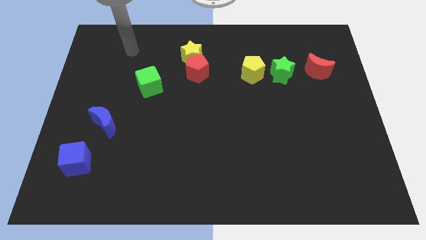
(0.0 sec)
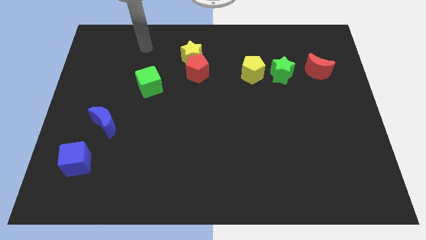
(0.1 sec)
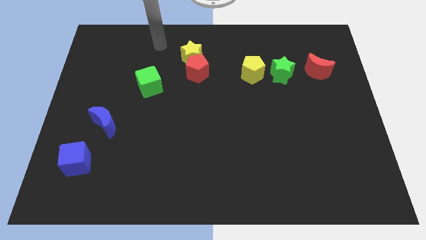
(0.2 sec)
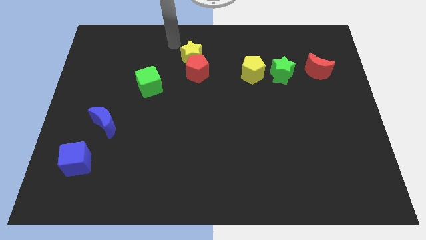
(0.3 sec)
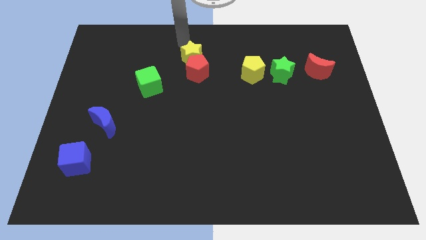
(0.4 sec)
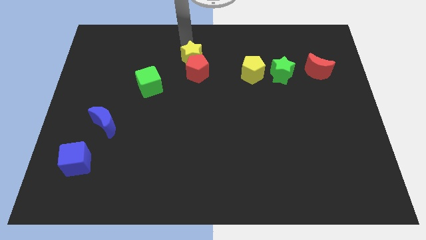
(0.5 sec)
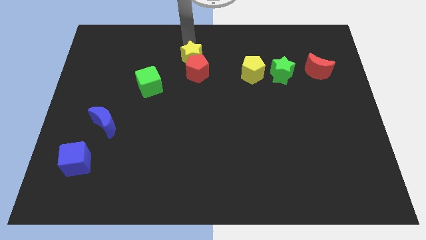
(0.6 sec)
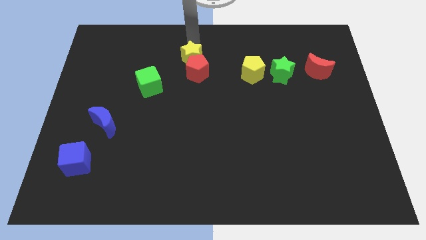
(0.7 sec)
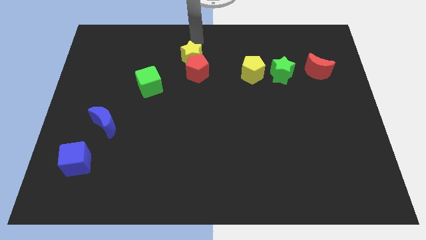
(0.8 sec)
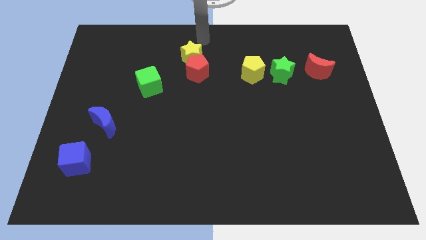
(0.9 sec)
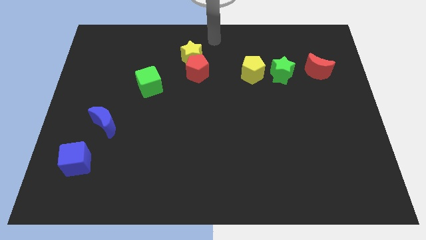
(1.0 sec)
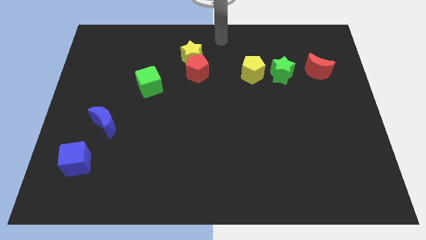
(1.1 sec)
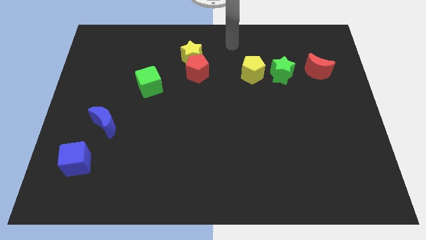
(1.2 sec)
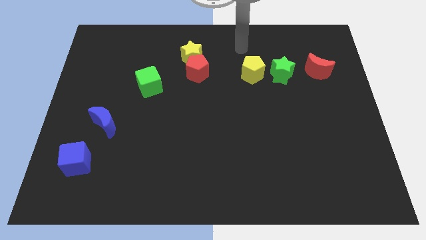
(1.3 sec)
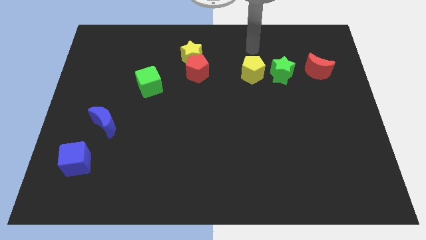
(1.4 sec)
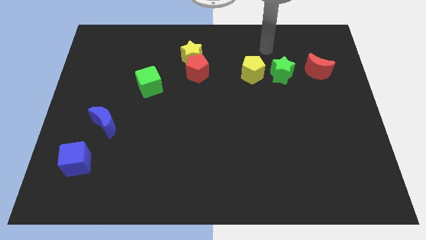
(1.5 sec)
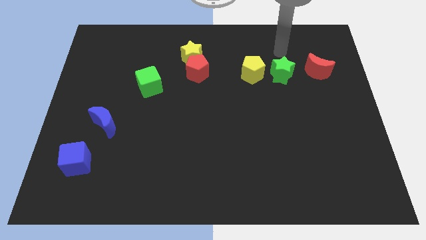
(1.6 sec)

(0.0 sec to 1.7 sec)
move the arm towards the green star

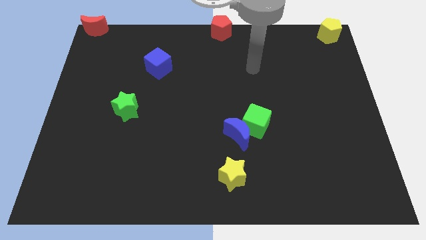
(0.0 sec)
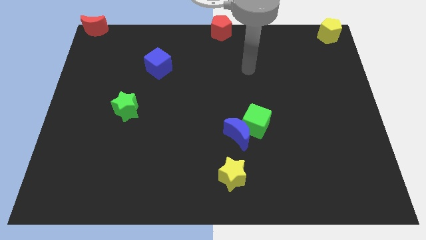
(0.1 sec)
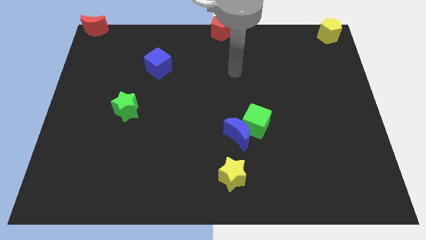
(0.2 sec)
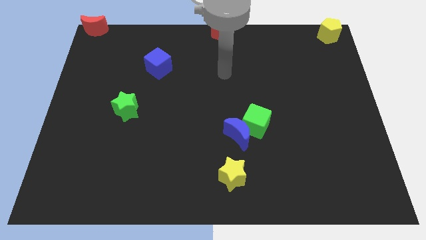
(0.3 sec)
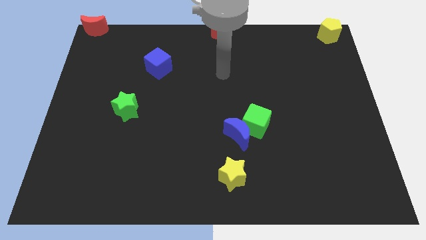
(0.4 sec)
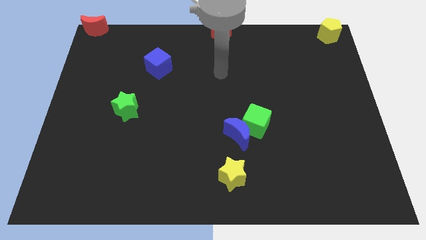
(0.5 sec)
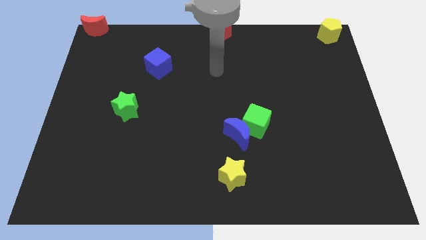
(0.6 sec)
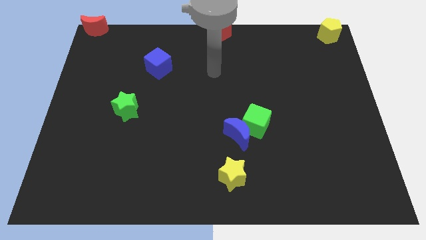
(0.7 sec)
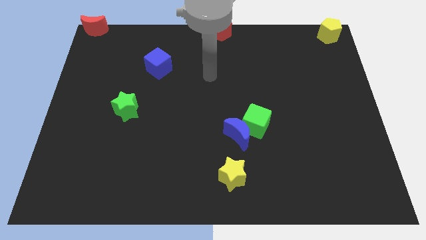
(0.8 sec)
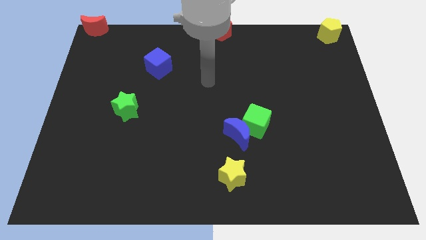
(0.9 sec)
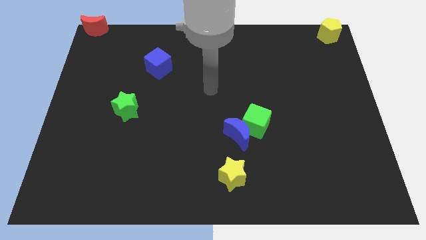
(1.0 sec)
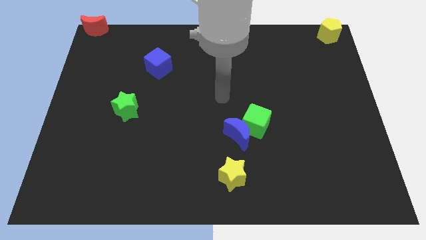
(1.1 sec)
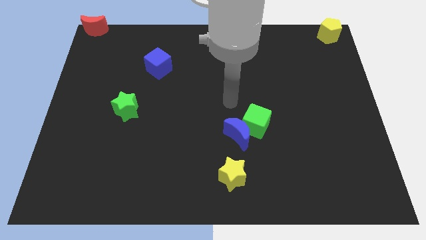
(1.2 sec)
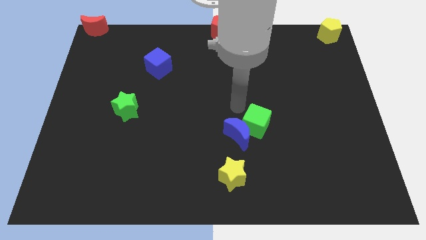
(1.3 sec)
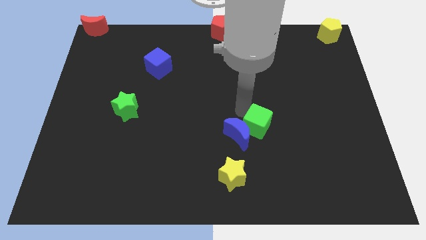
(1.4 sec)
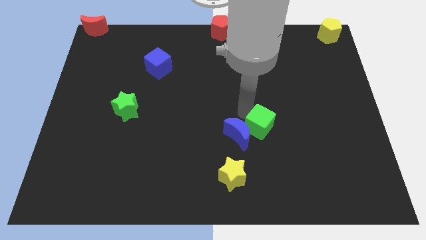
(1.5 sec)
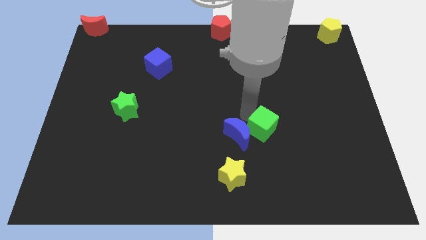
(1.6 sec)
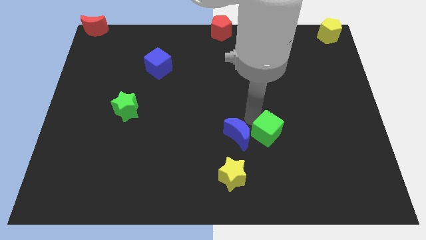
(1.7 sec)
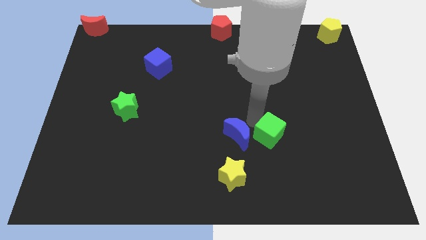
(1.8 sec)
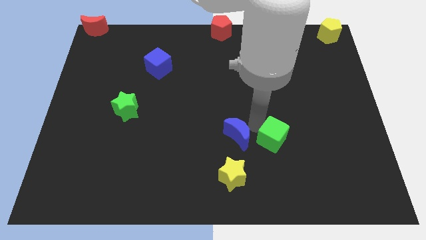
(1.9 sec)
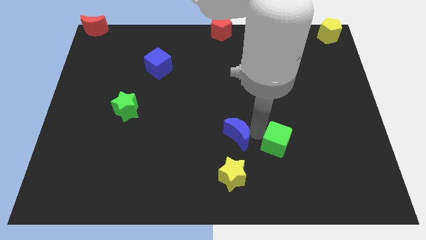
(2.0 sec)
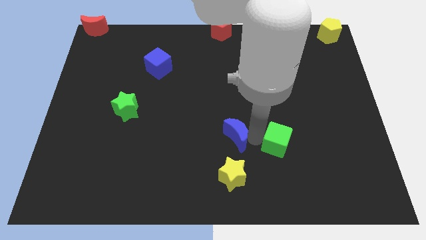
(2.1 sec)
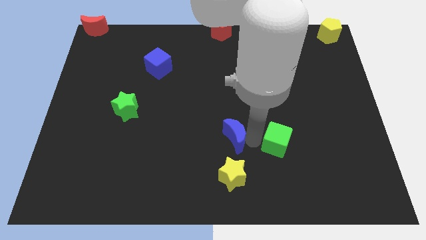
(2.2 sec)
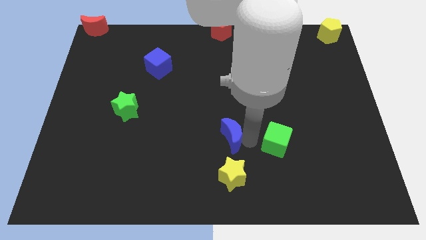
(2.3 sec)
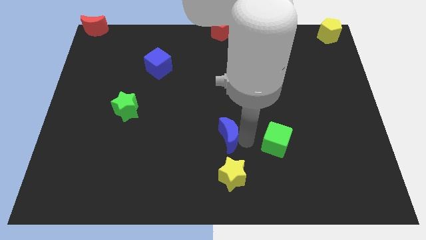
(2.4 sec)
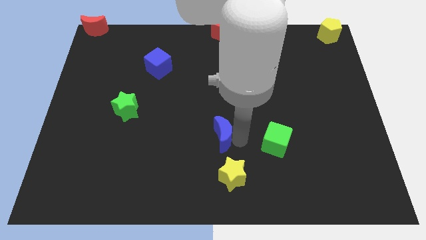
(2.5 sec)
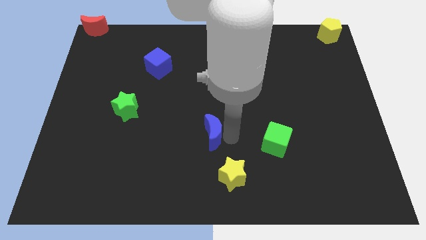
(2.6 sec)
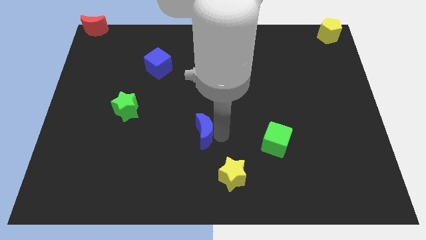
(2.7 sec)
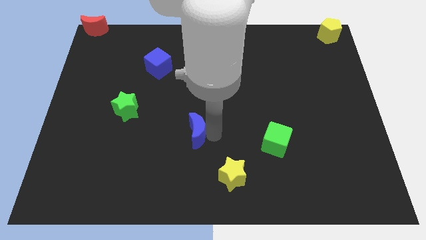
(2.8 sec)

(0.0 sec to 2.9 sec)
separate green cube from blue moon

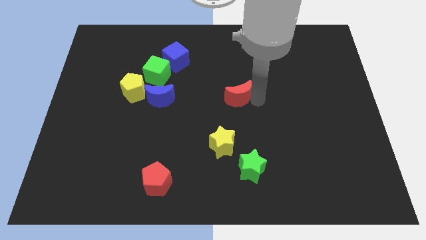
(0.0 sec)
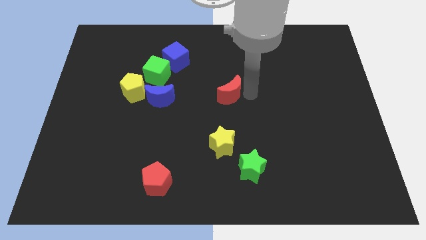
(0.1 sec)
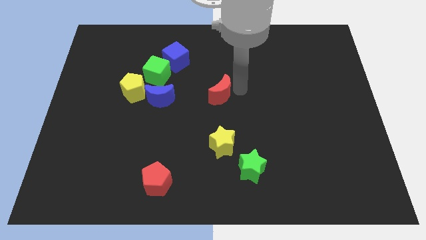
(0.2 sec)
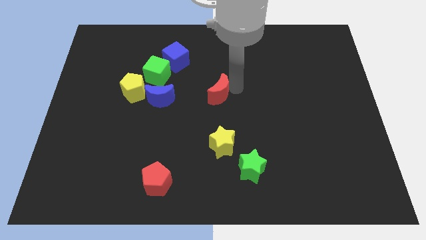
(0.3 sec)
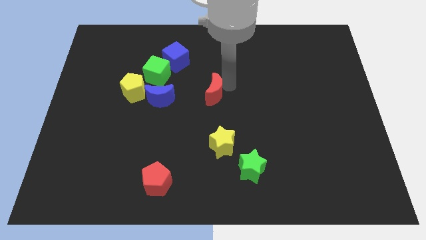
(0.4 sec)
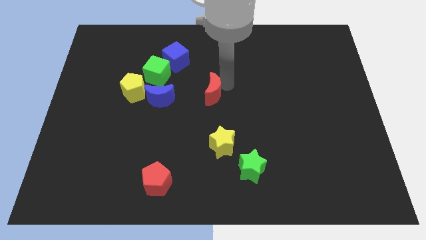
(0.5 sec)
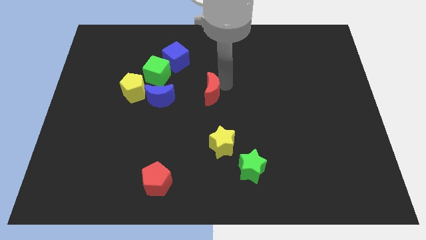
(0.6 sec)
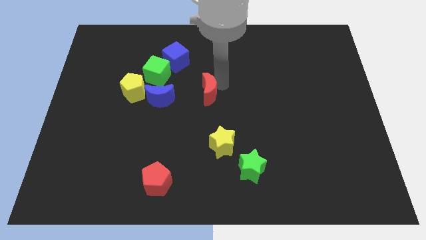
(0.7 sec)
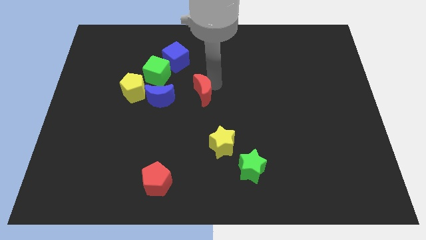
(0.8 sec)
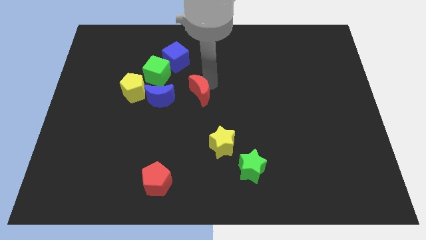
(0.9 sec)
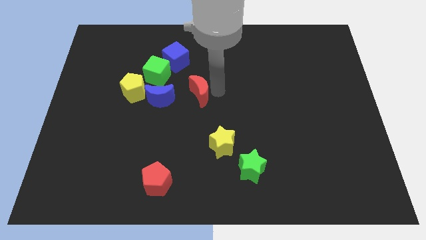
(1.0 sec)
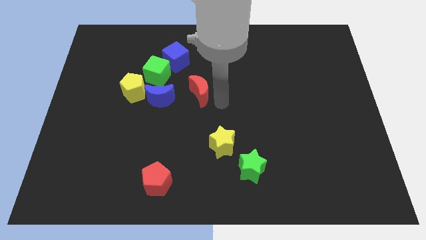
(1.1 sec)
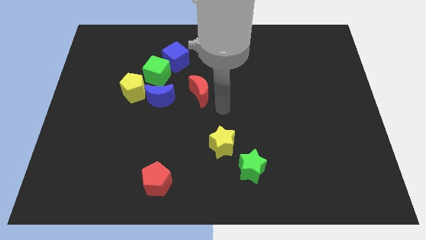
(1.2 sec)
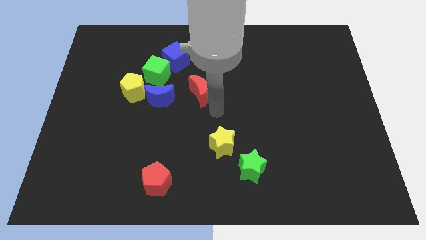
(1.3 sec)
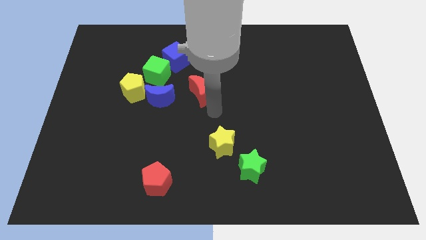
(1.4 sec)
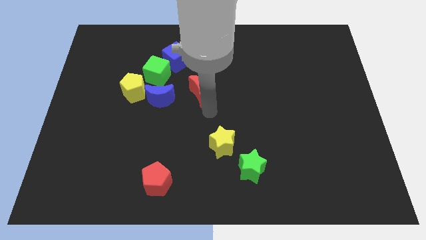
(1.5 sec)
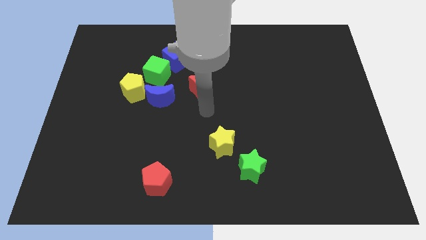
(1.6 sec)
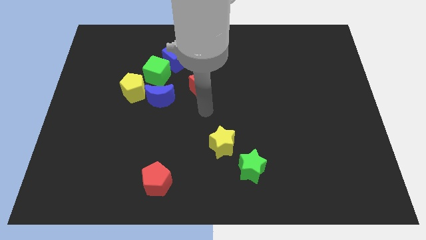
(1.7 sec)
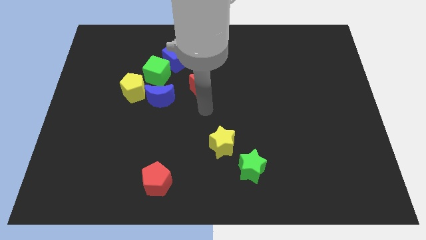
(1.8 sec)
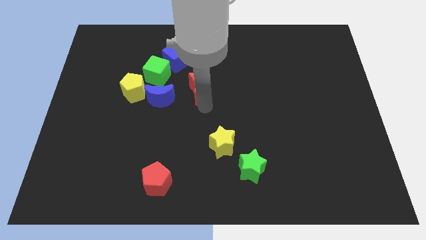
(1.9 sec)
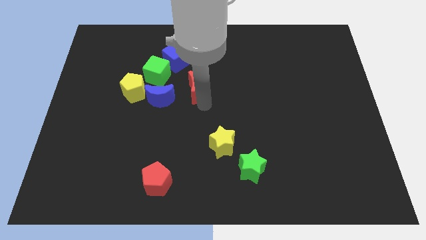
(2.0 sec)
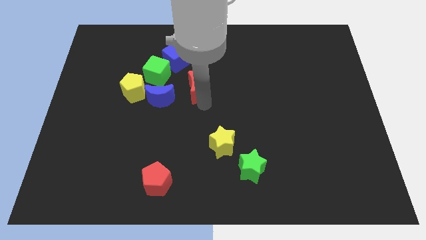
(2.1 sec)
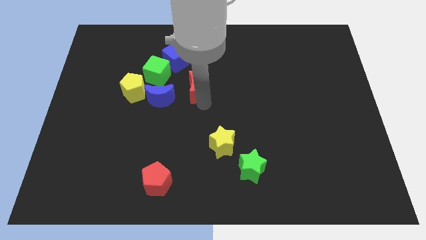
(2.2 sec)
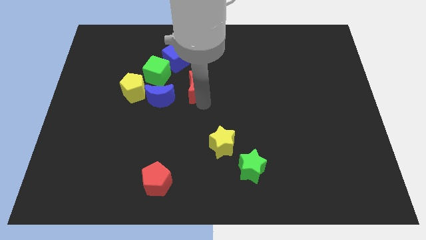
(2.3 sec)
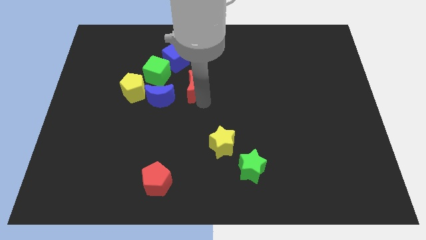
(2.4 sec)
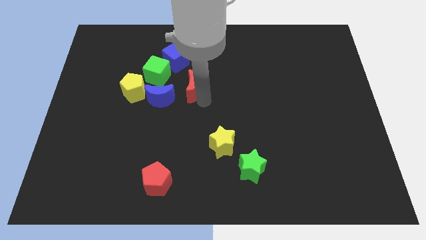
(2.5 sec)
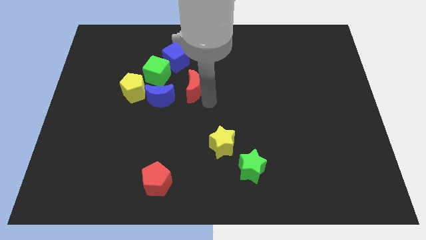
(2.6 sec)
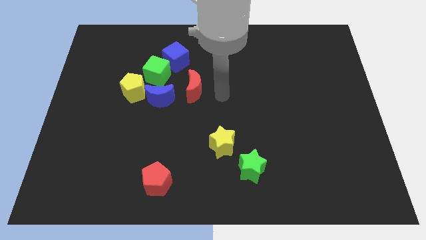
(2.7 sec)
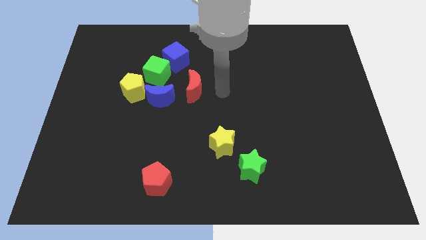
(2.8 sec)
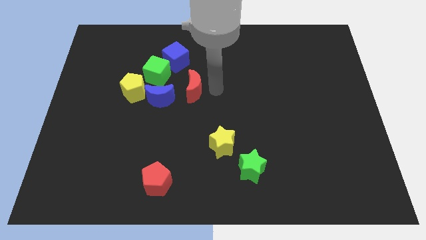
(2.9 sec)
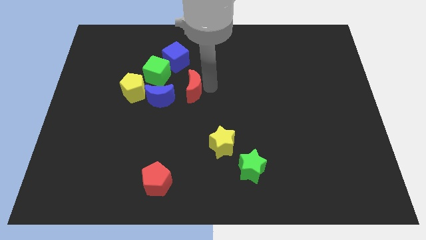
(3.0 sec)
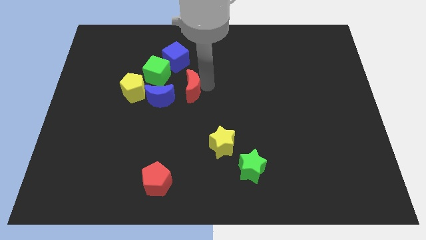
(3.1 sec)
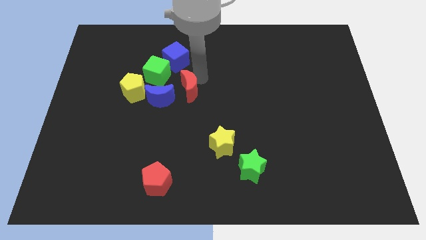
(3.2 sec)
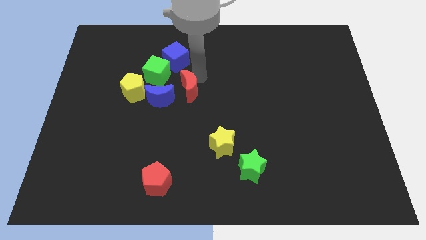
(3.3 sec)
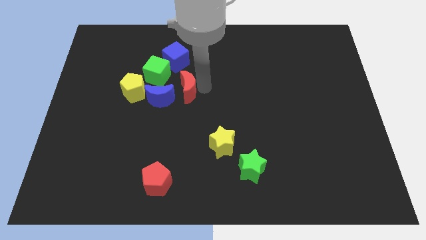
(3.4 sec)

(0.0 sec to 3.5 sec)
place red moon to the right of blue moon

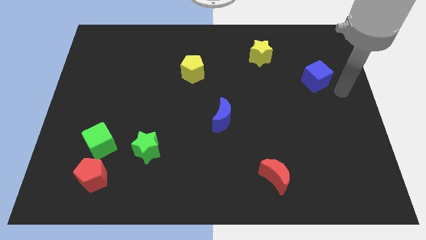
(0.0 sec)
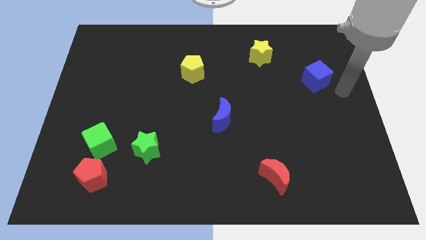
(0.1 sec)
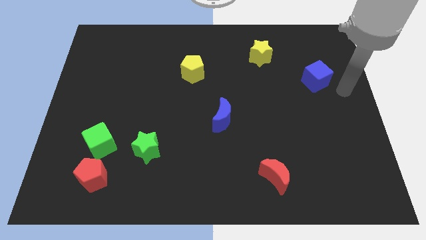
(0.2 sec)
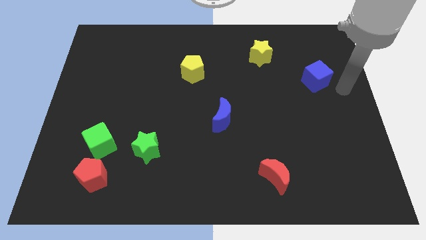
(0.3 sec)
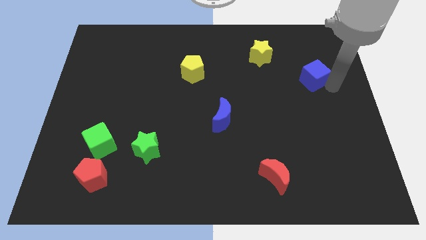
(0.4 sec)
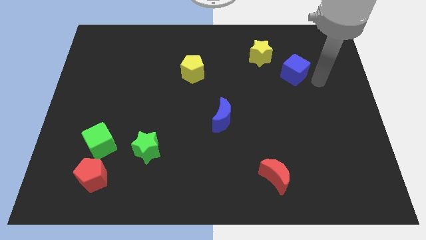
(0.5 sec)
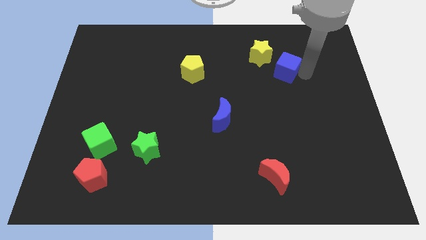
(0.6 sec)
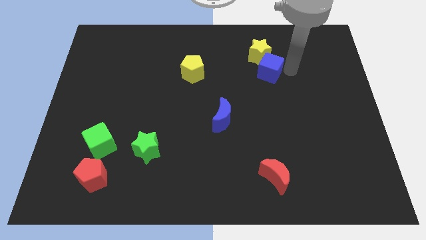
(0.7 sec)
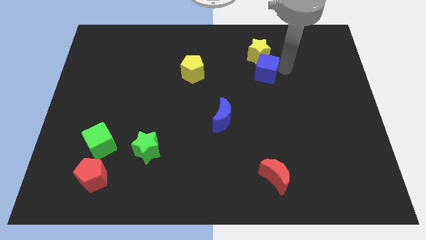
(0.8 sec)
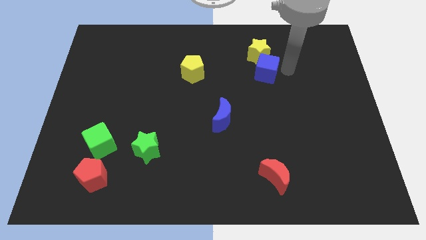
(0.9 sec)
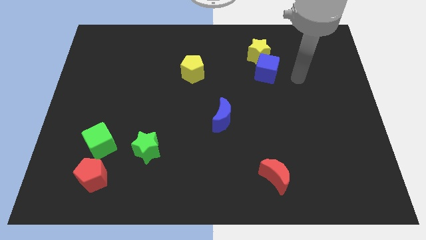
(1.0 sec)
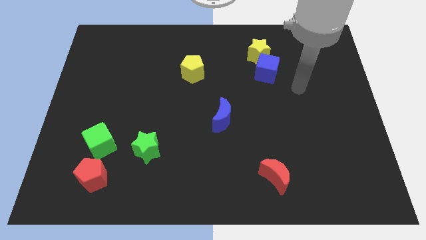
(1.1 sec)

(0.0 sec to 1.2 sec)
move the blue cube to bottom of yellow star
